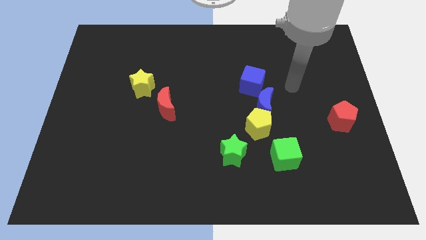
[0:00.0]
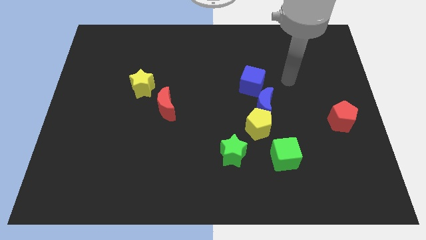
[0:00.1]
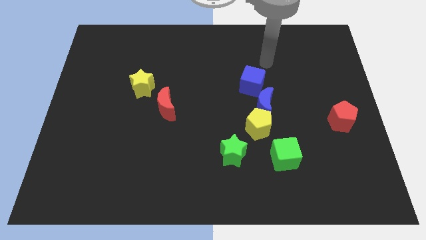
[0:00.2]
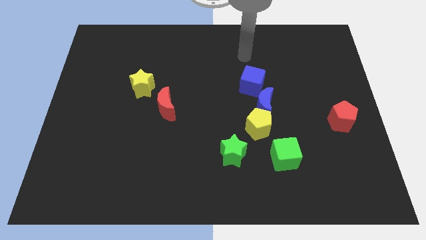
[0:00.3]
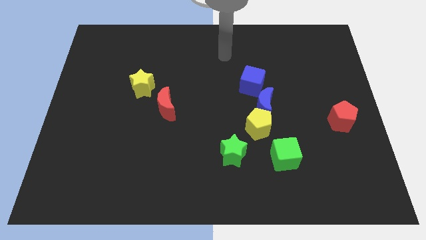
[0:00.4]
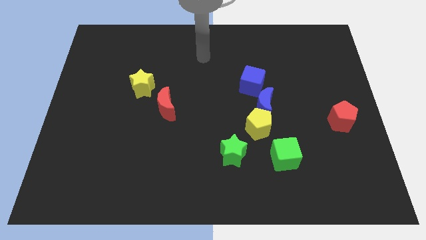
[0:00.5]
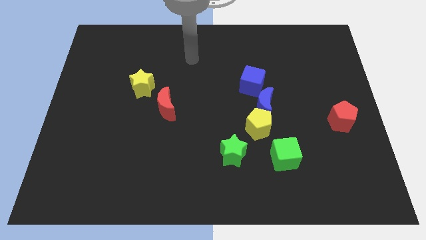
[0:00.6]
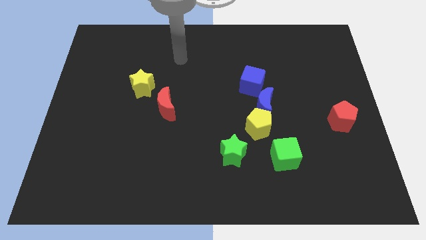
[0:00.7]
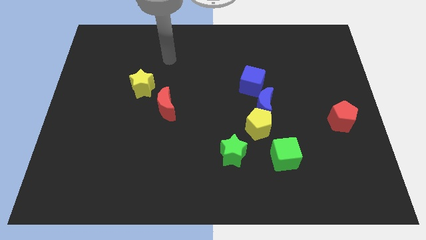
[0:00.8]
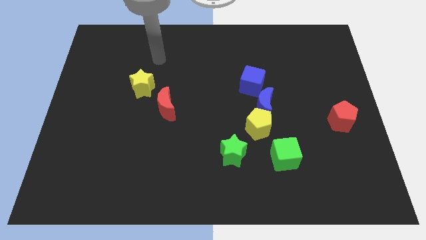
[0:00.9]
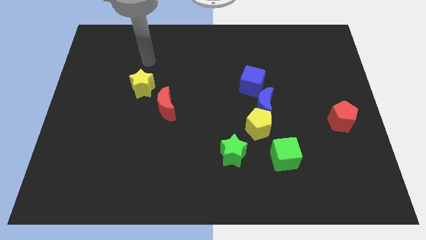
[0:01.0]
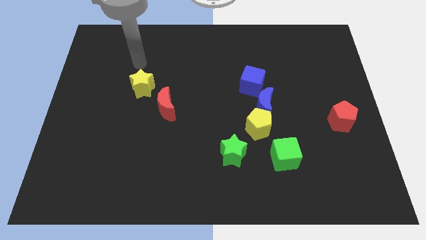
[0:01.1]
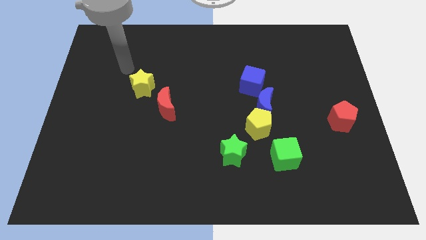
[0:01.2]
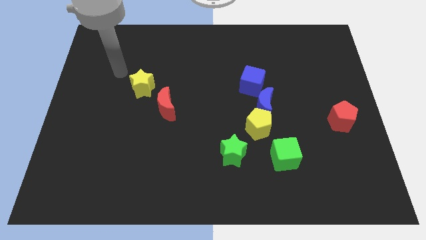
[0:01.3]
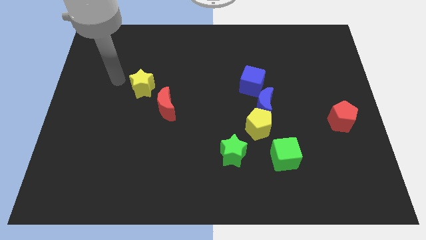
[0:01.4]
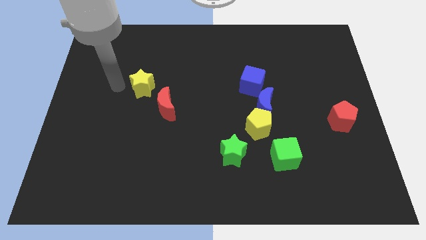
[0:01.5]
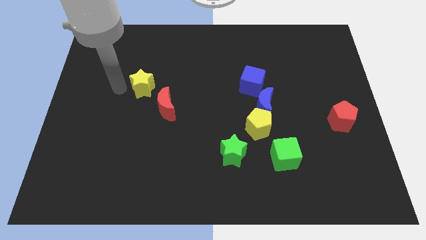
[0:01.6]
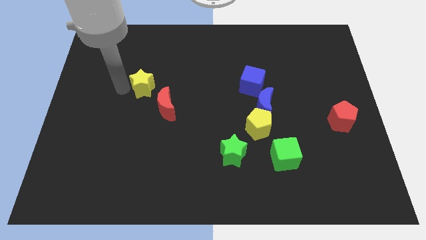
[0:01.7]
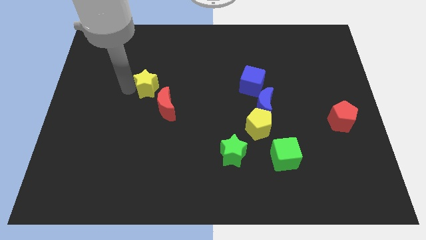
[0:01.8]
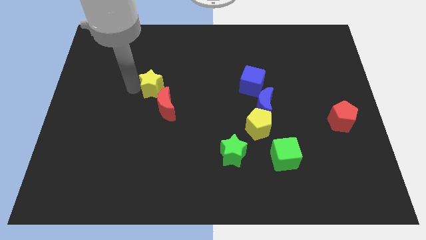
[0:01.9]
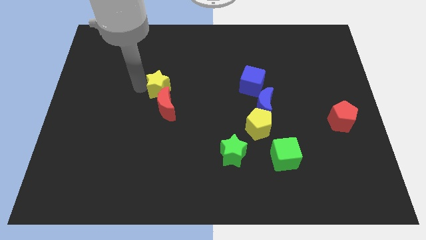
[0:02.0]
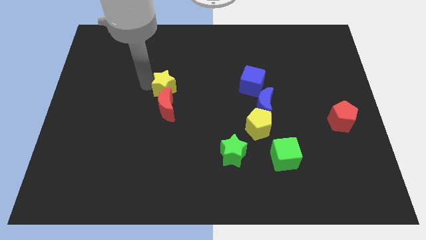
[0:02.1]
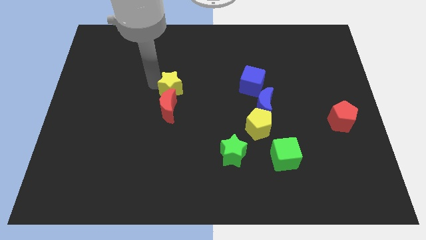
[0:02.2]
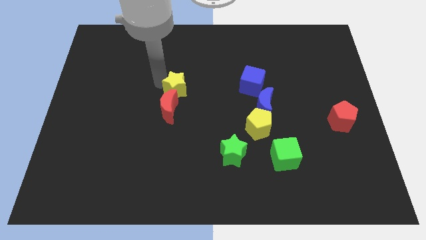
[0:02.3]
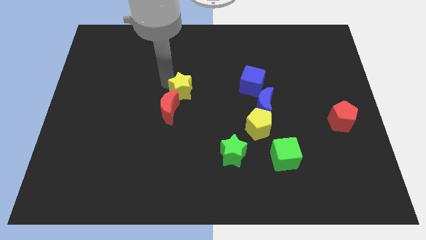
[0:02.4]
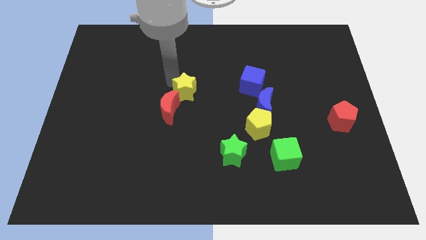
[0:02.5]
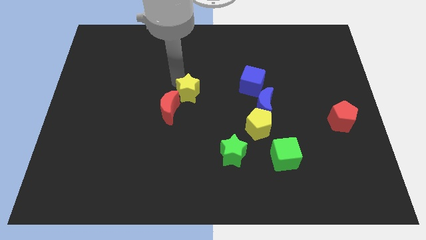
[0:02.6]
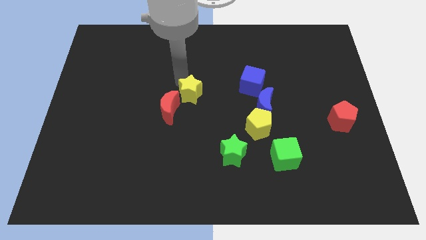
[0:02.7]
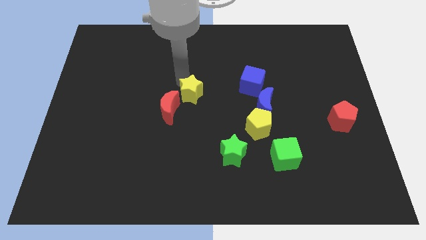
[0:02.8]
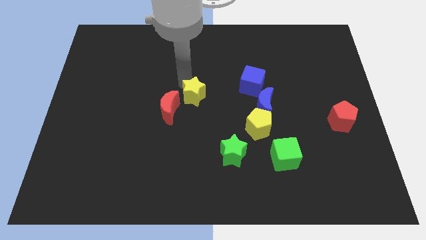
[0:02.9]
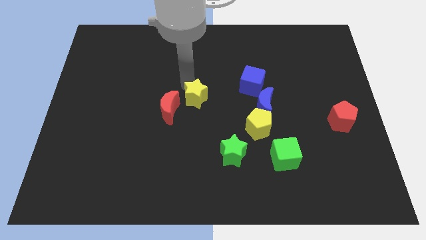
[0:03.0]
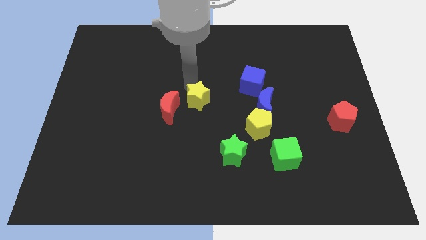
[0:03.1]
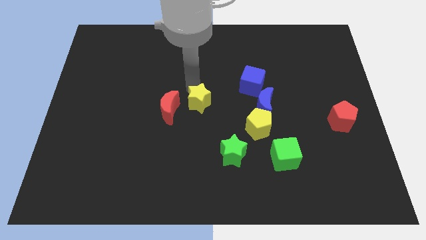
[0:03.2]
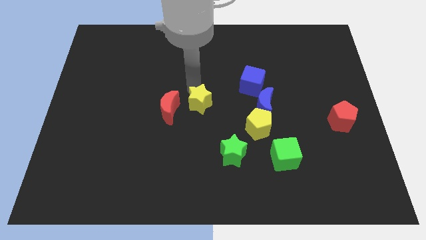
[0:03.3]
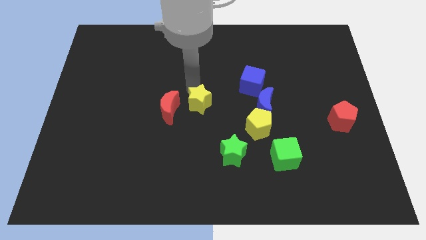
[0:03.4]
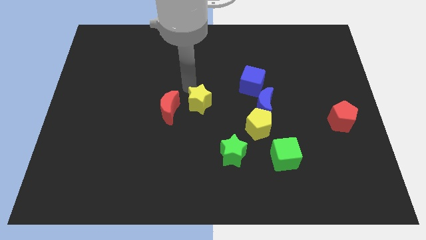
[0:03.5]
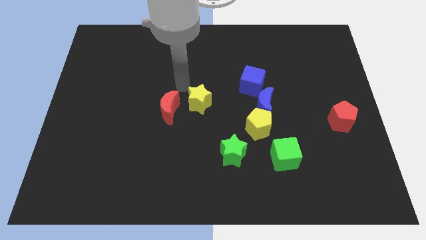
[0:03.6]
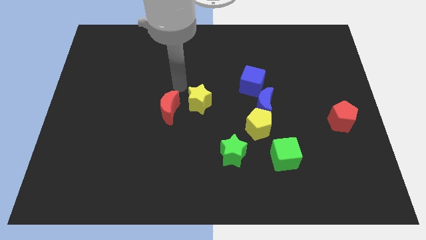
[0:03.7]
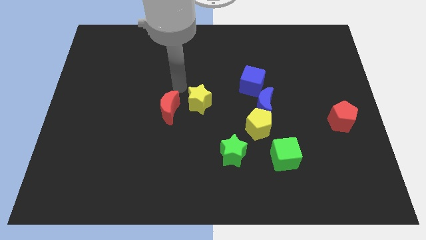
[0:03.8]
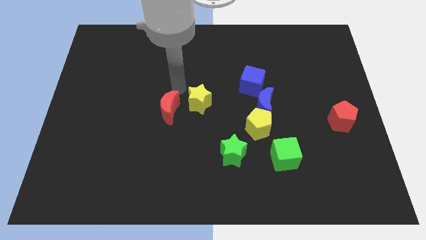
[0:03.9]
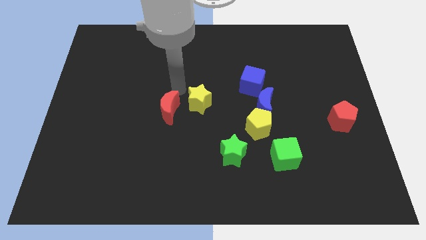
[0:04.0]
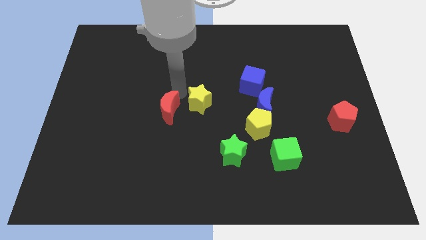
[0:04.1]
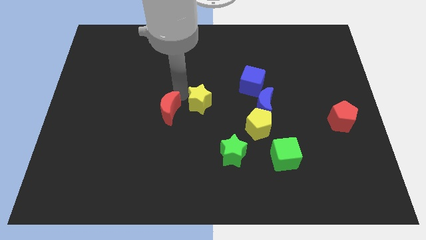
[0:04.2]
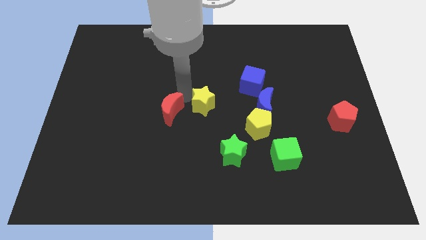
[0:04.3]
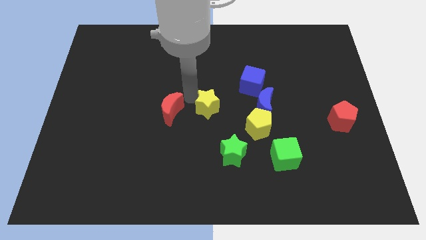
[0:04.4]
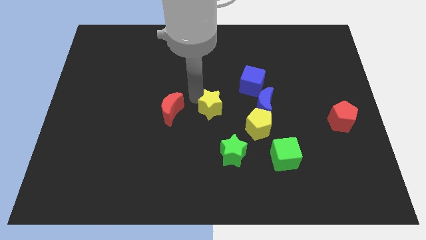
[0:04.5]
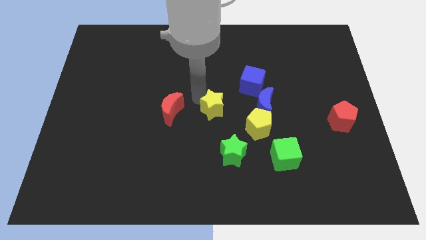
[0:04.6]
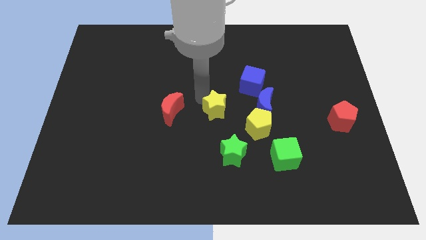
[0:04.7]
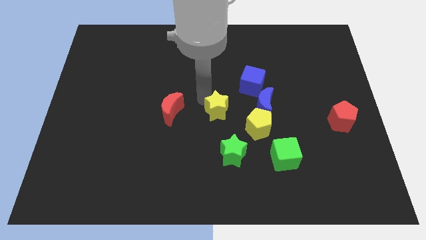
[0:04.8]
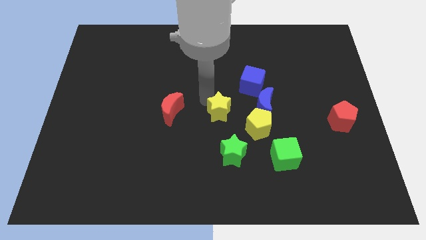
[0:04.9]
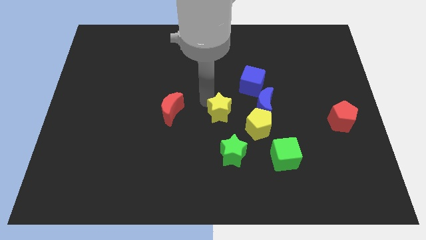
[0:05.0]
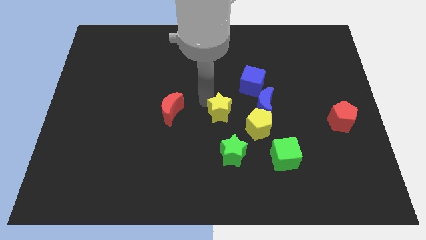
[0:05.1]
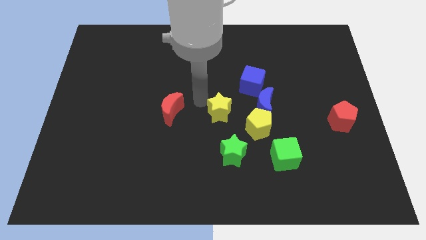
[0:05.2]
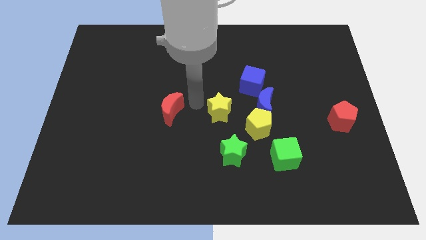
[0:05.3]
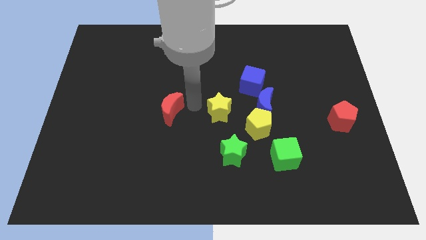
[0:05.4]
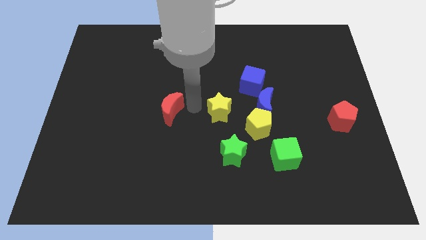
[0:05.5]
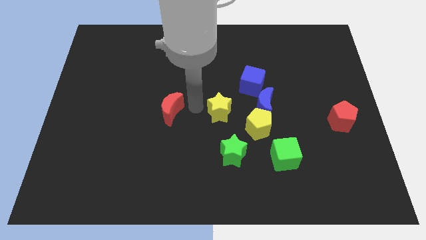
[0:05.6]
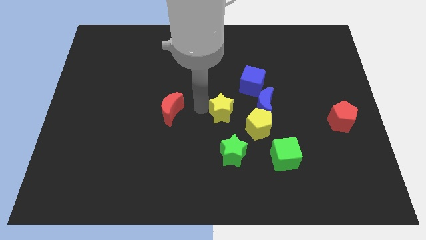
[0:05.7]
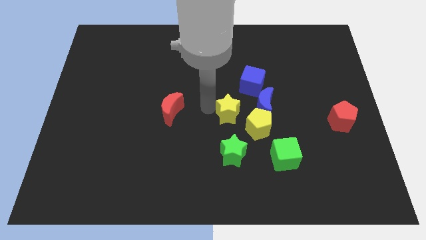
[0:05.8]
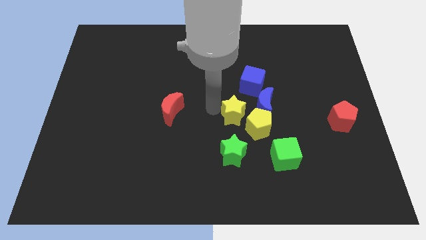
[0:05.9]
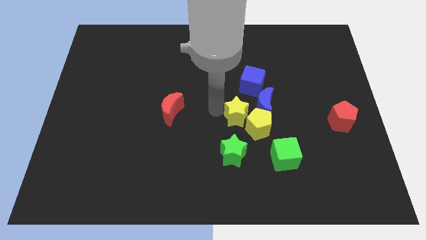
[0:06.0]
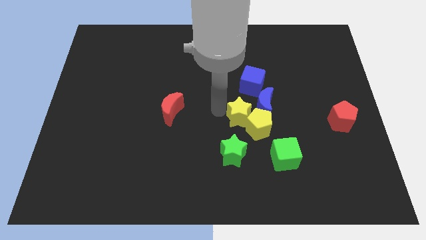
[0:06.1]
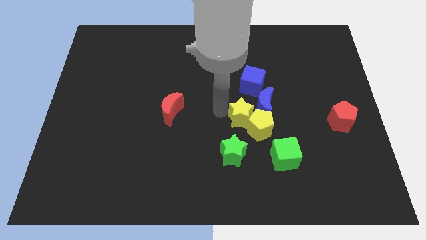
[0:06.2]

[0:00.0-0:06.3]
put the yellow star towards the yellow pentagon

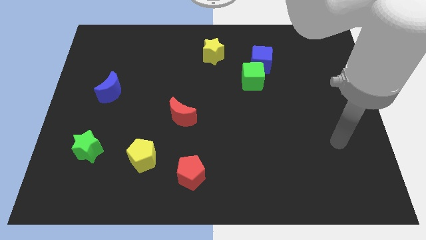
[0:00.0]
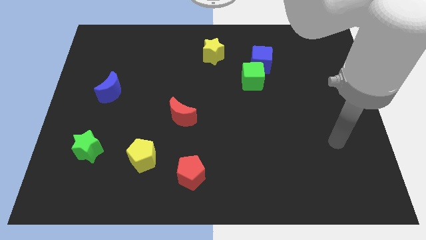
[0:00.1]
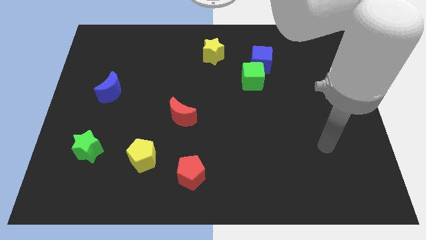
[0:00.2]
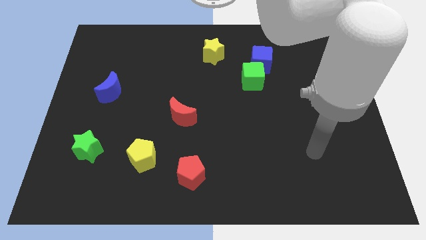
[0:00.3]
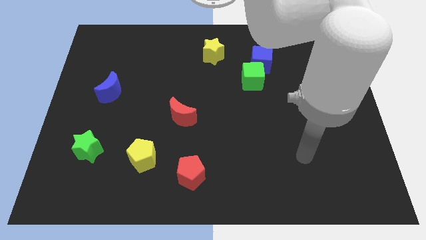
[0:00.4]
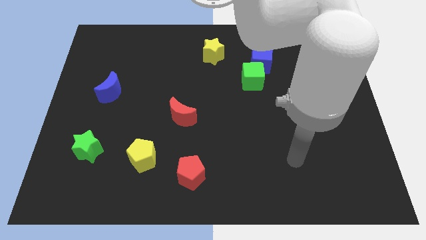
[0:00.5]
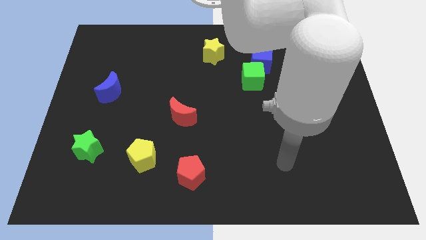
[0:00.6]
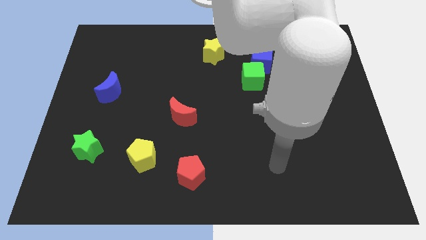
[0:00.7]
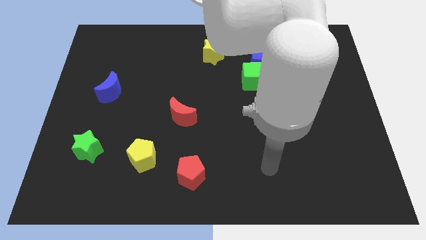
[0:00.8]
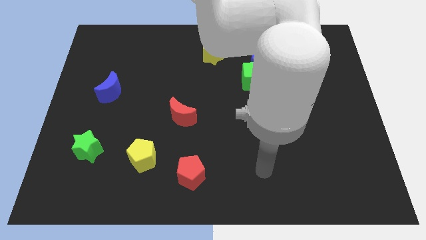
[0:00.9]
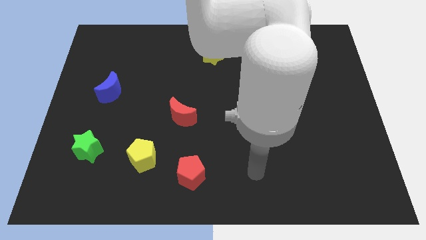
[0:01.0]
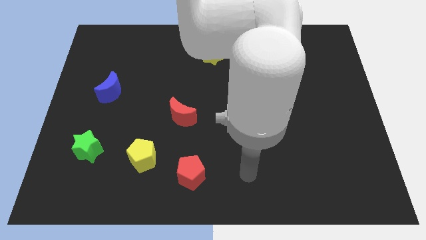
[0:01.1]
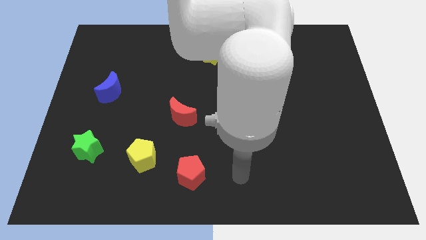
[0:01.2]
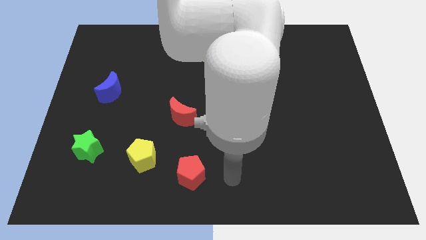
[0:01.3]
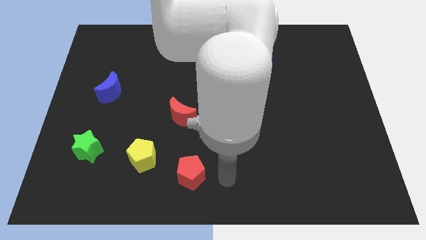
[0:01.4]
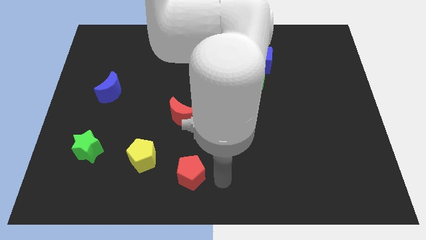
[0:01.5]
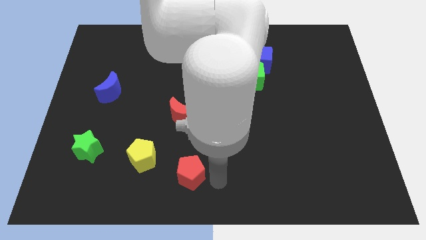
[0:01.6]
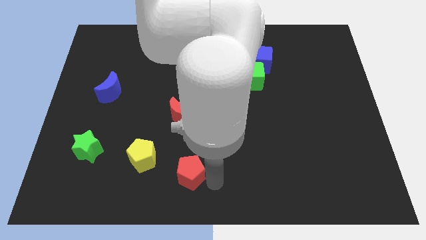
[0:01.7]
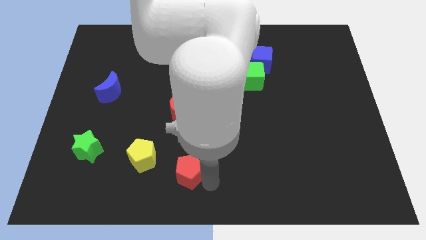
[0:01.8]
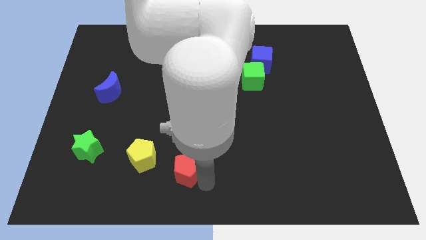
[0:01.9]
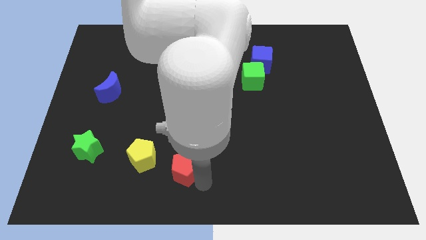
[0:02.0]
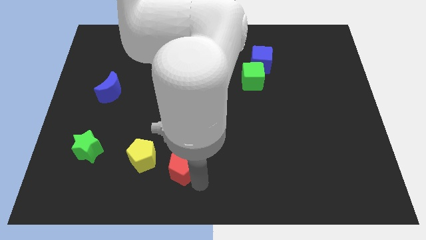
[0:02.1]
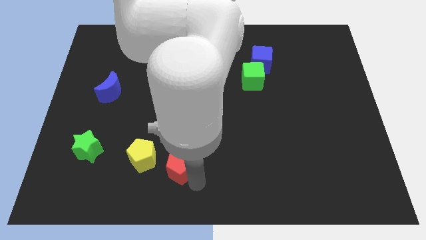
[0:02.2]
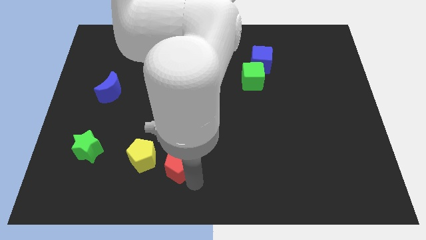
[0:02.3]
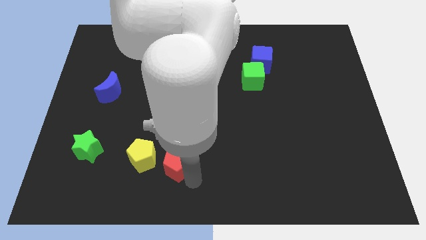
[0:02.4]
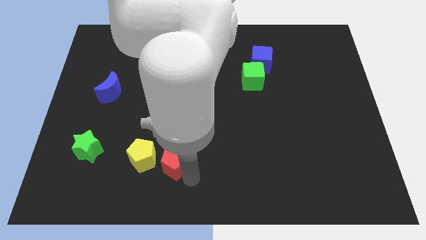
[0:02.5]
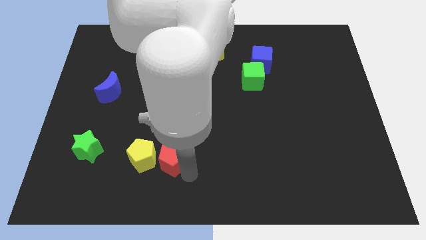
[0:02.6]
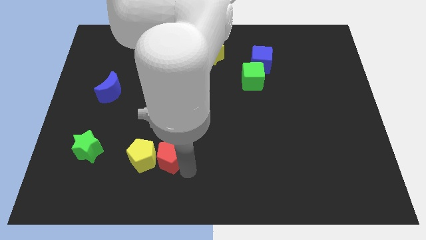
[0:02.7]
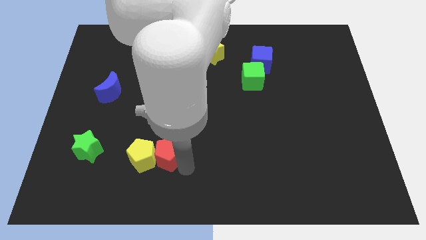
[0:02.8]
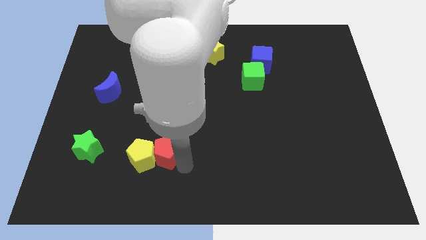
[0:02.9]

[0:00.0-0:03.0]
put the red pentagon next to the yellow pentagon
